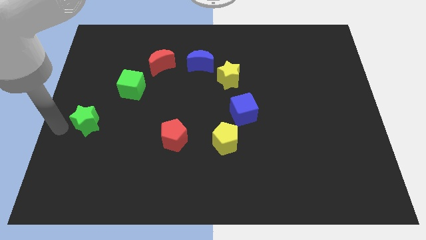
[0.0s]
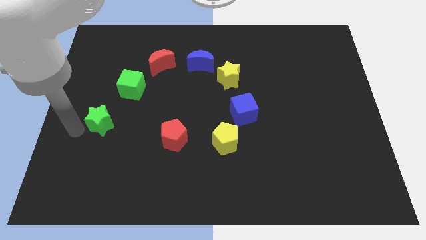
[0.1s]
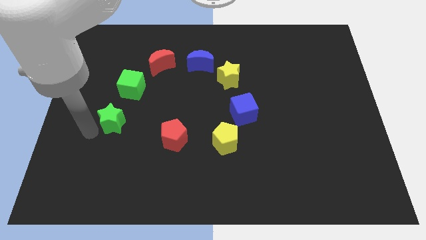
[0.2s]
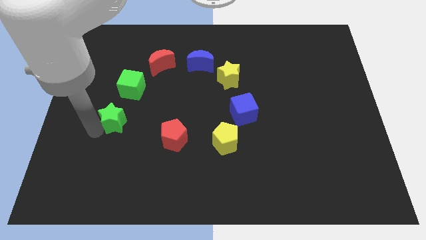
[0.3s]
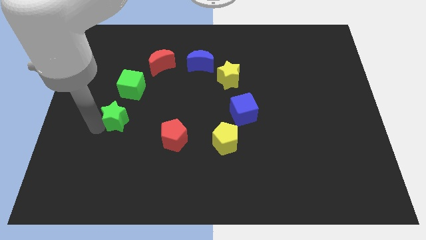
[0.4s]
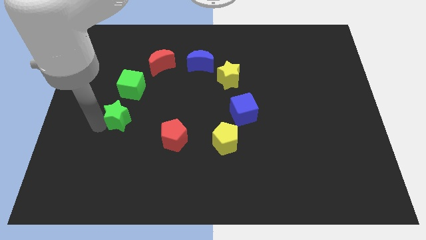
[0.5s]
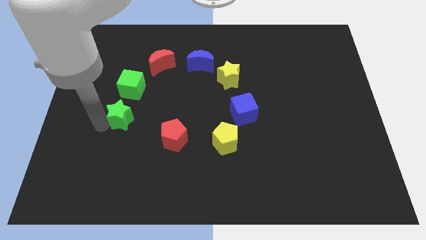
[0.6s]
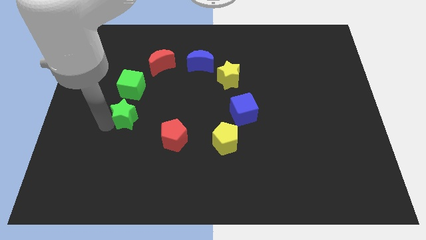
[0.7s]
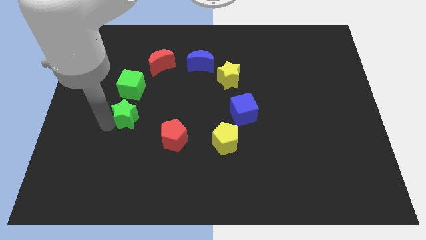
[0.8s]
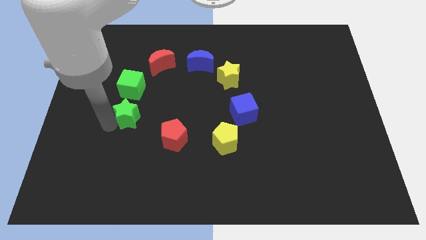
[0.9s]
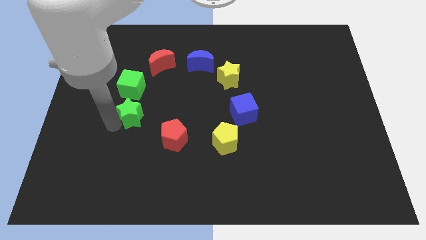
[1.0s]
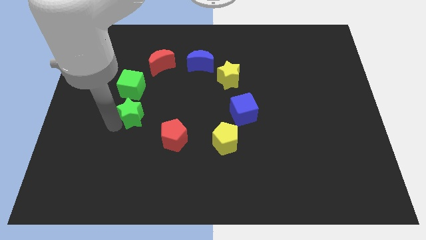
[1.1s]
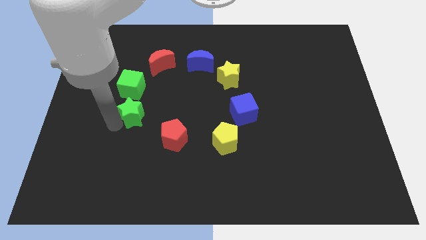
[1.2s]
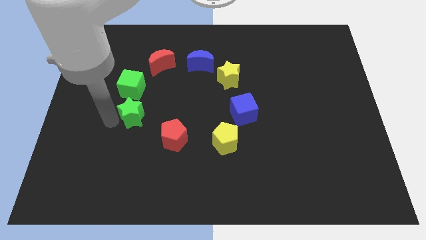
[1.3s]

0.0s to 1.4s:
place the green star diagonally top left to the red pentagon

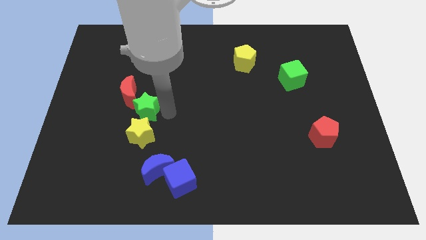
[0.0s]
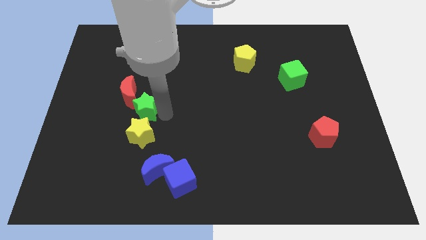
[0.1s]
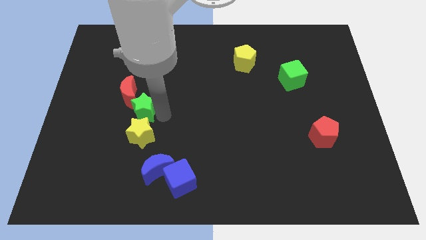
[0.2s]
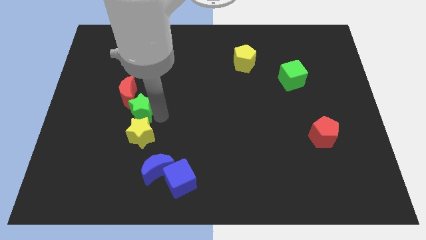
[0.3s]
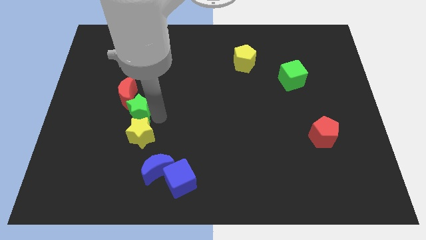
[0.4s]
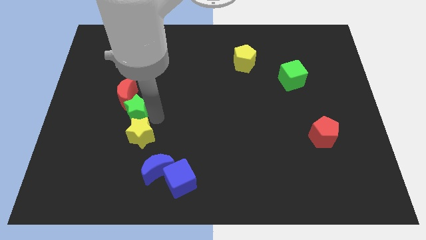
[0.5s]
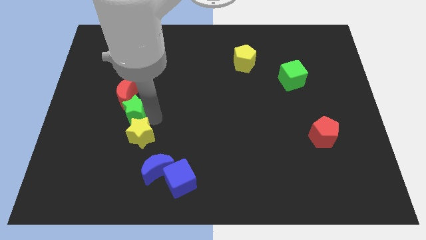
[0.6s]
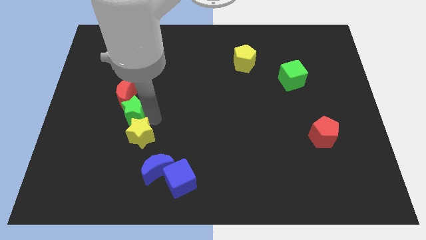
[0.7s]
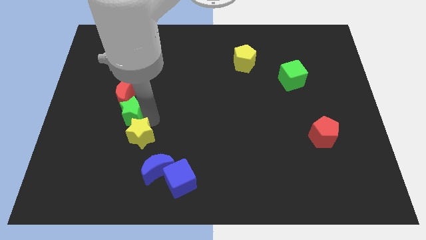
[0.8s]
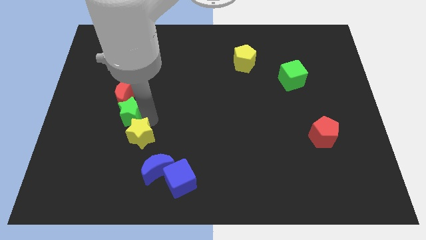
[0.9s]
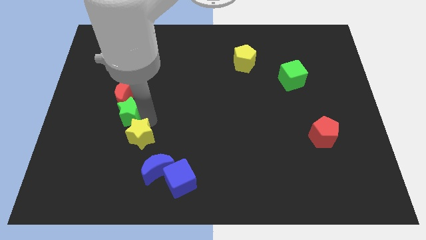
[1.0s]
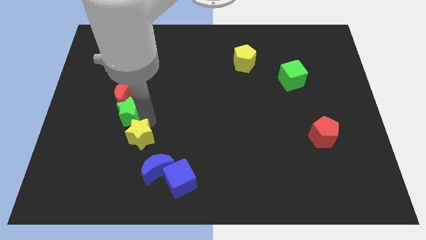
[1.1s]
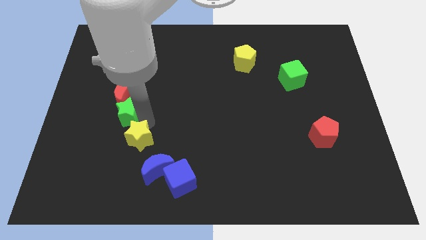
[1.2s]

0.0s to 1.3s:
place the green star in between the yellow star and red moon

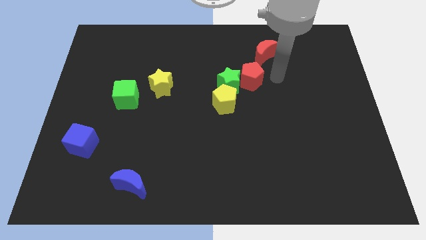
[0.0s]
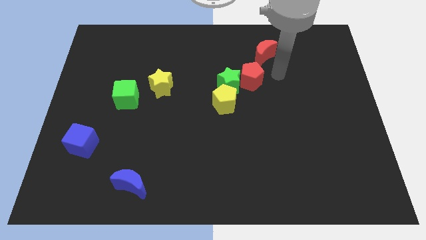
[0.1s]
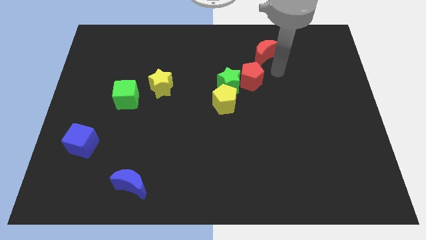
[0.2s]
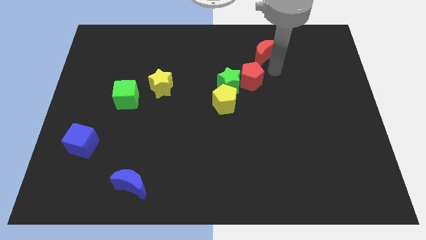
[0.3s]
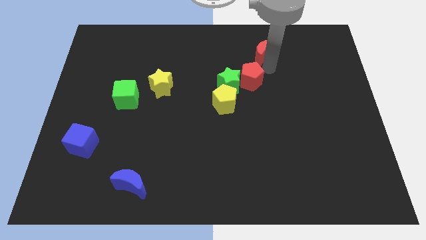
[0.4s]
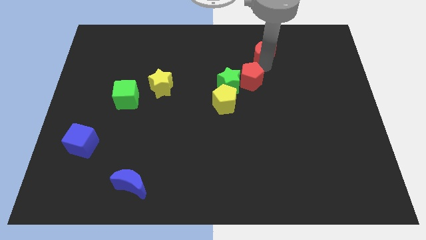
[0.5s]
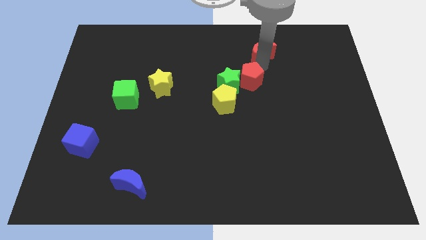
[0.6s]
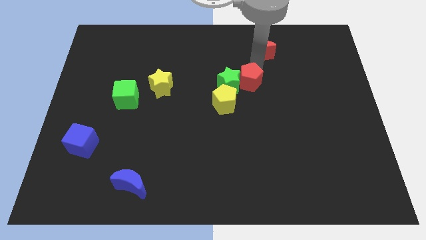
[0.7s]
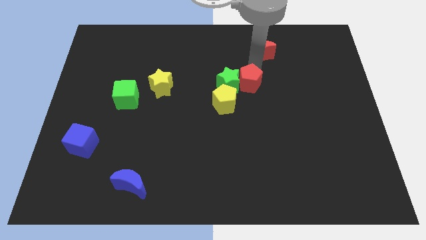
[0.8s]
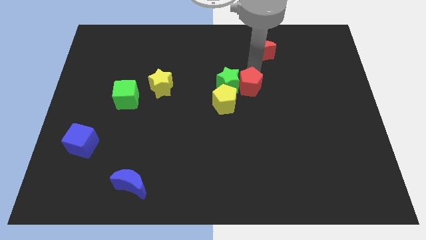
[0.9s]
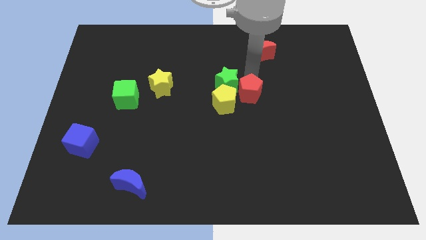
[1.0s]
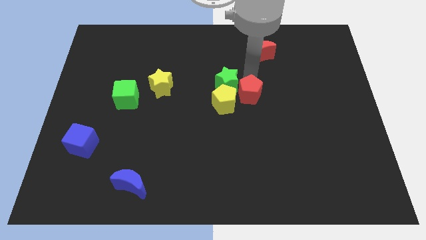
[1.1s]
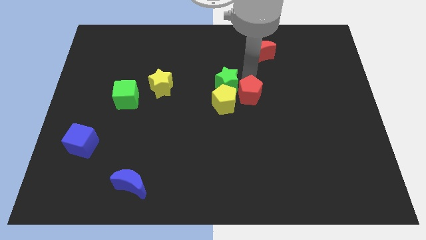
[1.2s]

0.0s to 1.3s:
push the red pentagon slightly downwards

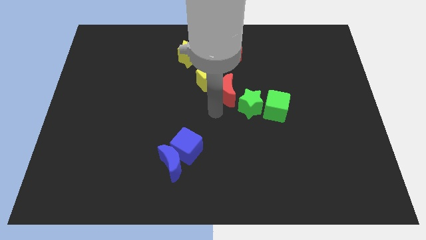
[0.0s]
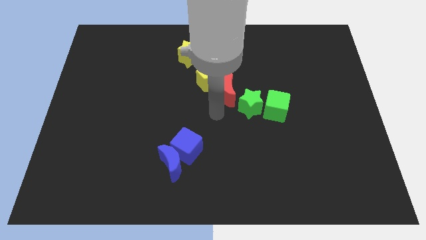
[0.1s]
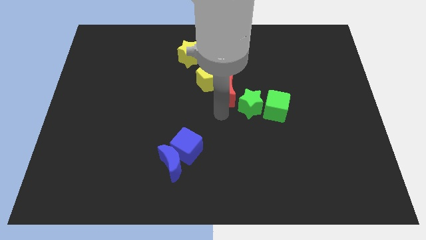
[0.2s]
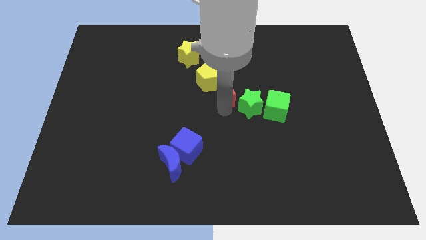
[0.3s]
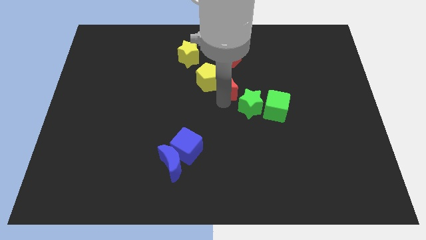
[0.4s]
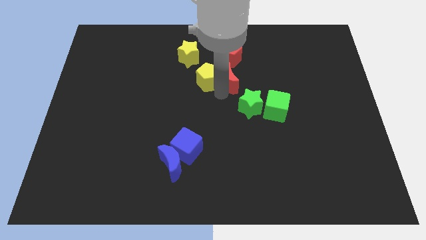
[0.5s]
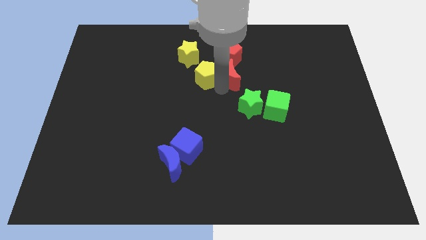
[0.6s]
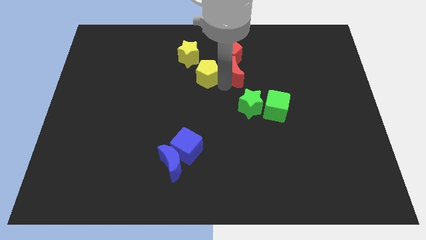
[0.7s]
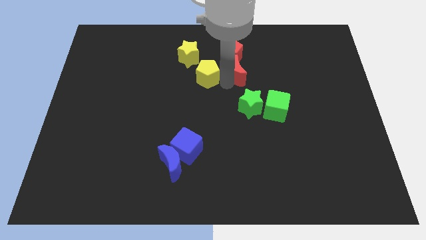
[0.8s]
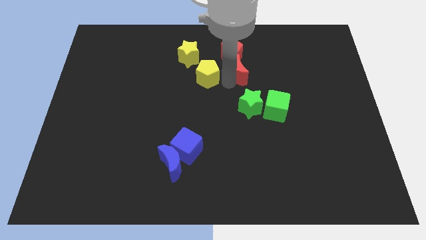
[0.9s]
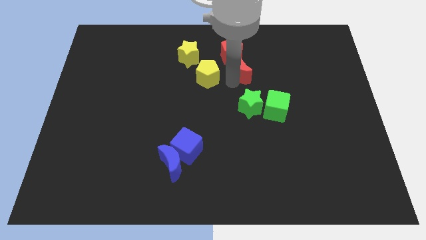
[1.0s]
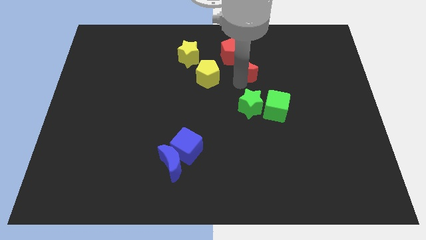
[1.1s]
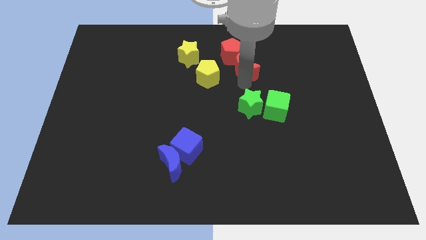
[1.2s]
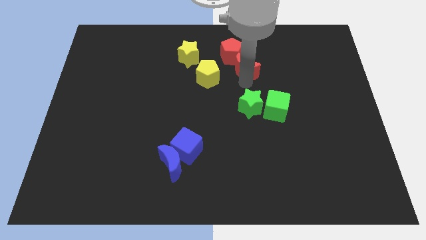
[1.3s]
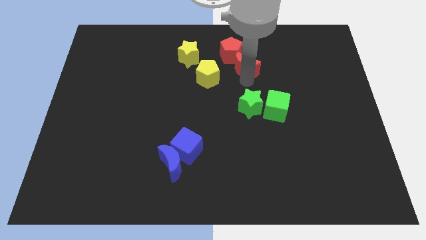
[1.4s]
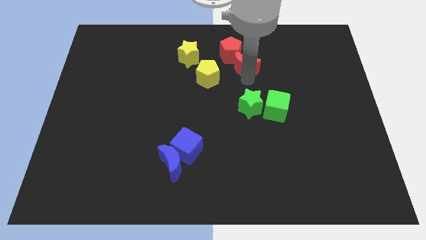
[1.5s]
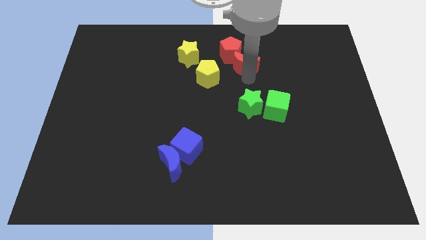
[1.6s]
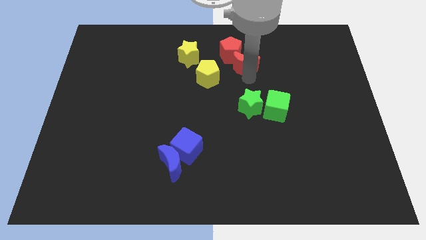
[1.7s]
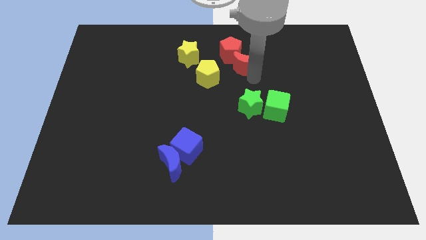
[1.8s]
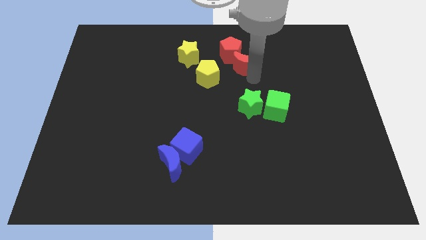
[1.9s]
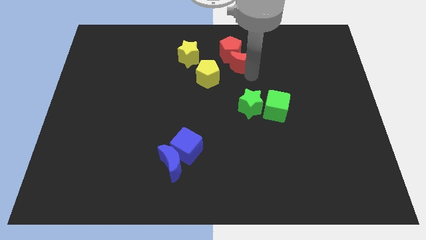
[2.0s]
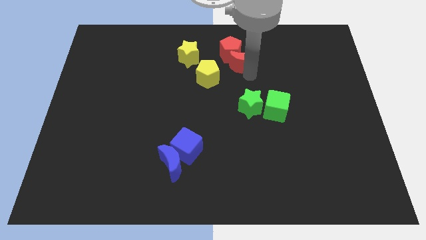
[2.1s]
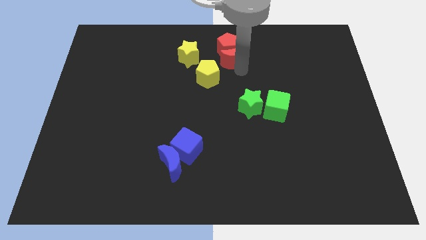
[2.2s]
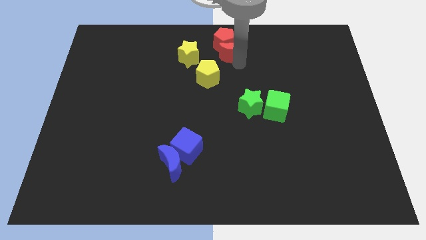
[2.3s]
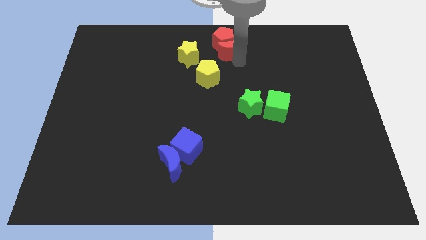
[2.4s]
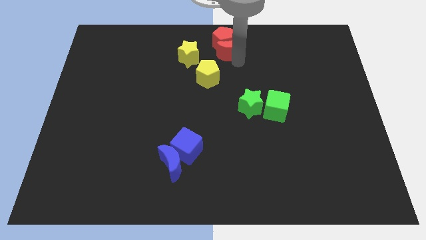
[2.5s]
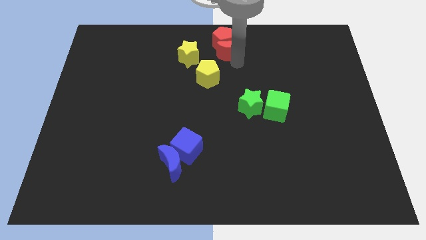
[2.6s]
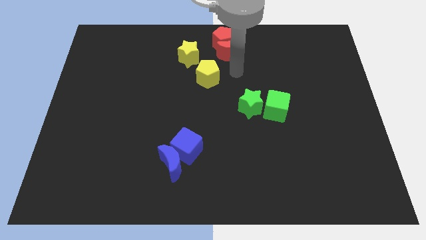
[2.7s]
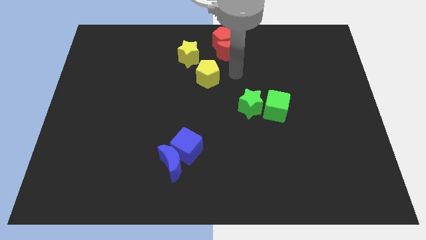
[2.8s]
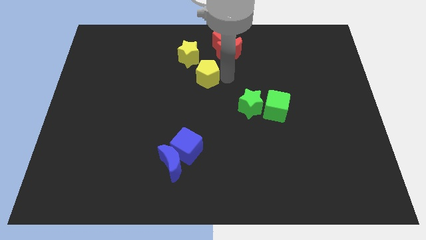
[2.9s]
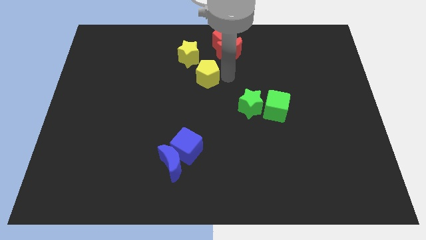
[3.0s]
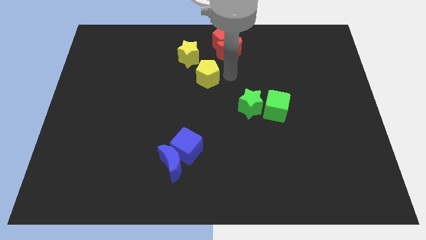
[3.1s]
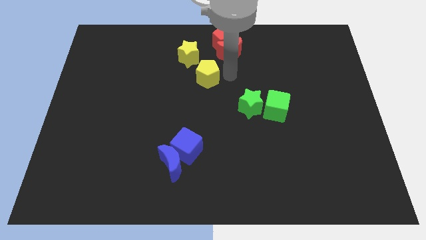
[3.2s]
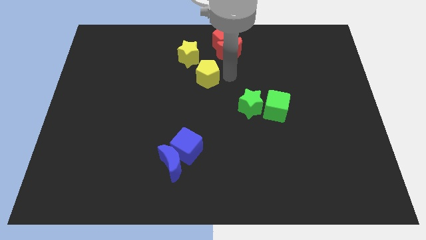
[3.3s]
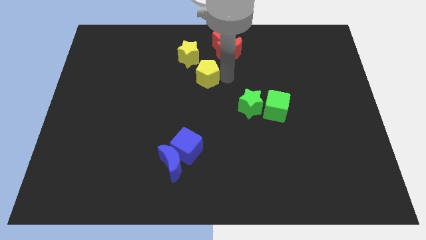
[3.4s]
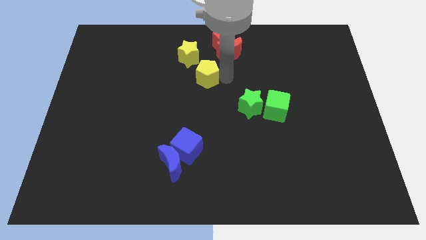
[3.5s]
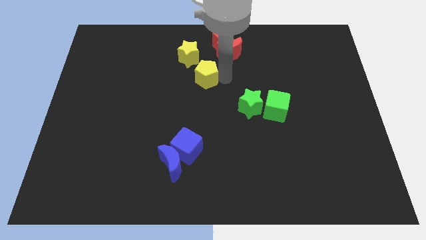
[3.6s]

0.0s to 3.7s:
move both the blocks towards the top center of the board

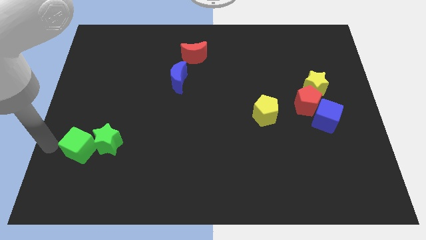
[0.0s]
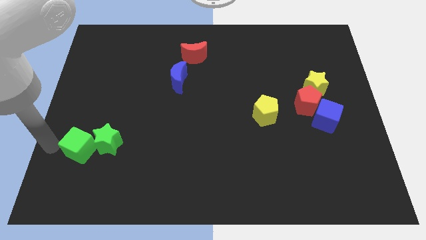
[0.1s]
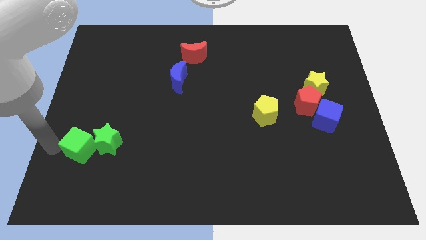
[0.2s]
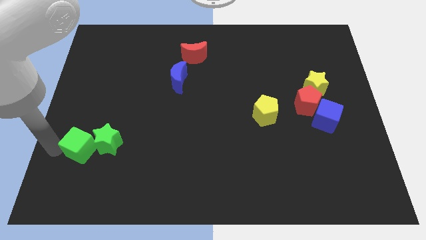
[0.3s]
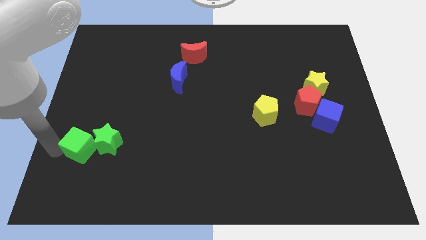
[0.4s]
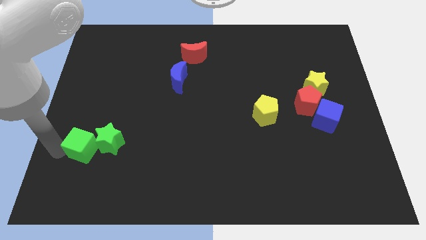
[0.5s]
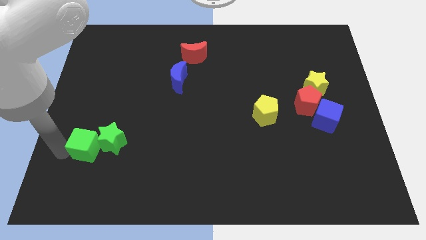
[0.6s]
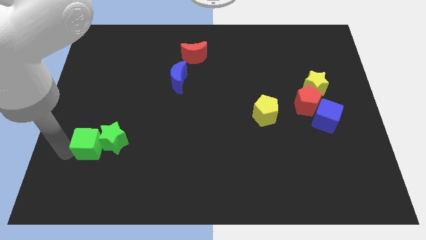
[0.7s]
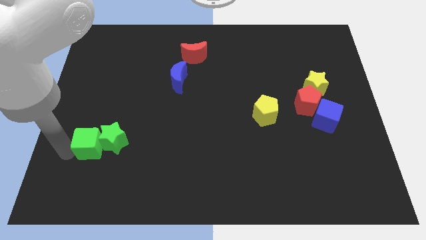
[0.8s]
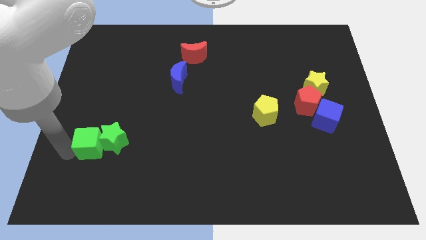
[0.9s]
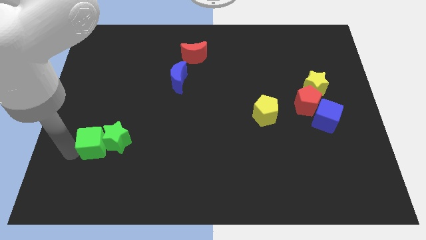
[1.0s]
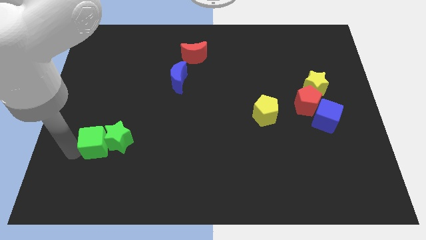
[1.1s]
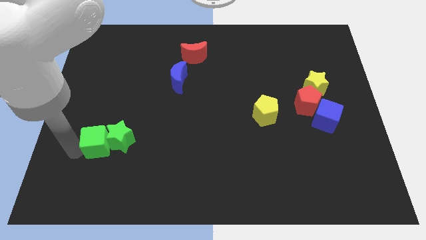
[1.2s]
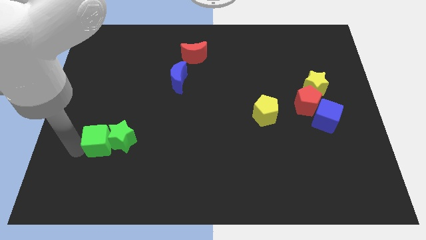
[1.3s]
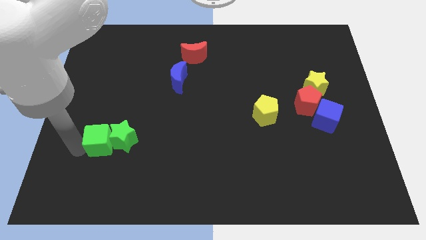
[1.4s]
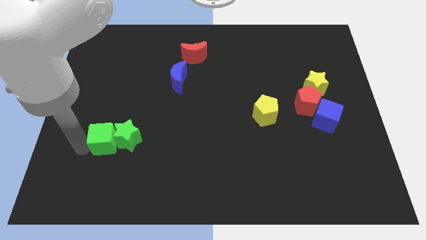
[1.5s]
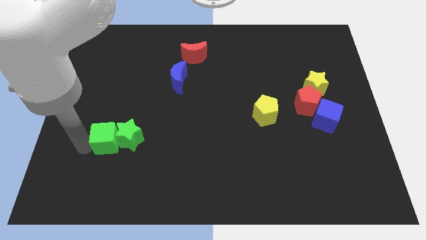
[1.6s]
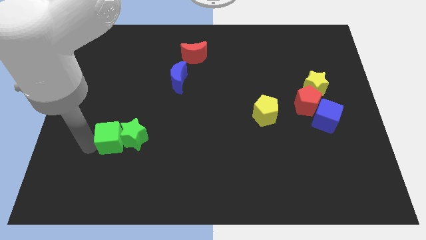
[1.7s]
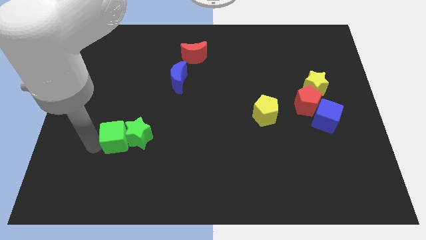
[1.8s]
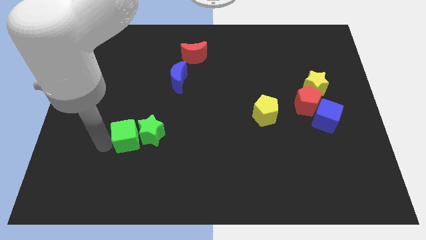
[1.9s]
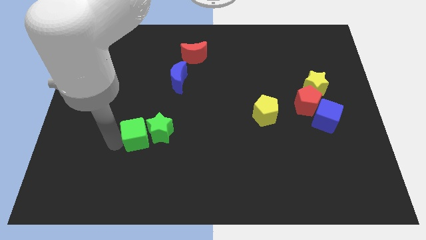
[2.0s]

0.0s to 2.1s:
move the green star with the green cube towards the center
